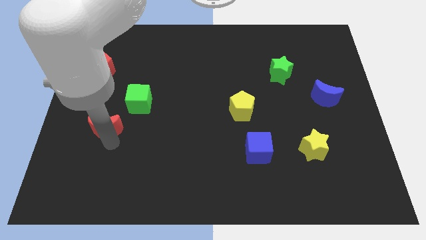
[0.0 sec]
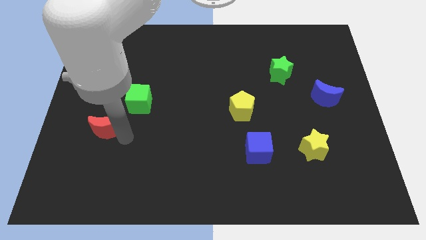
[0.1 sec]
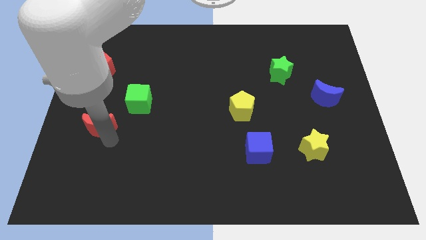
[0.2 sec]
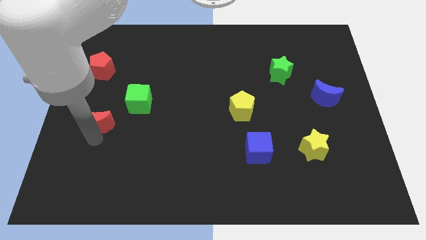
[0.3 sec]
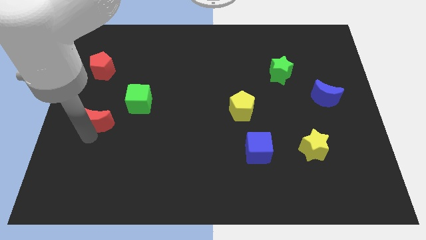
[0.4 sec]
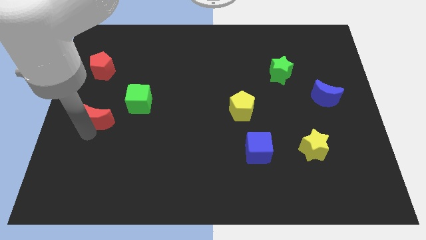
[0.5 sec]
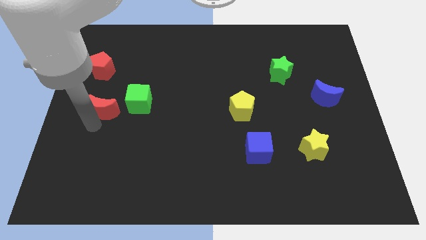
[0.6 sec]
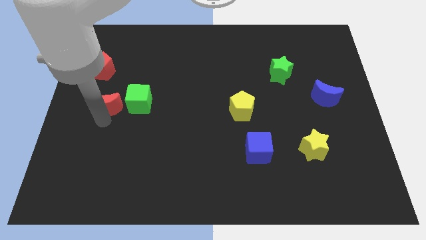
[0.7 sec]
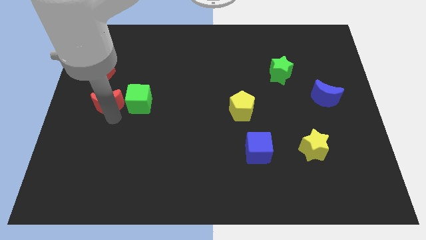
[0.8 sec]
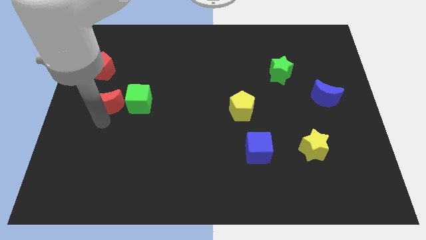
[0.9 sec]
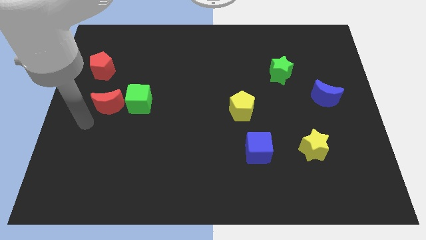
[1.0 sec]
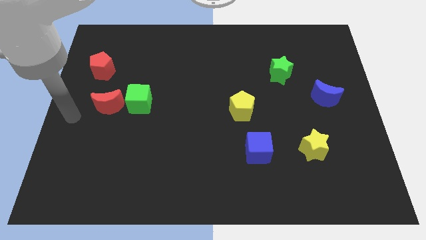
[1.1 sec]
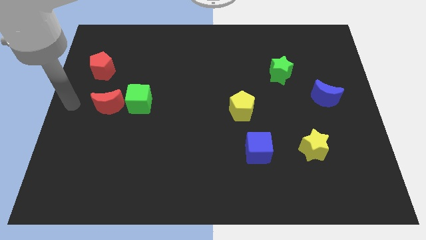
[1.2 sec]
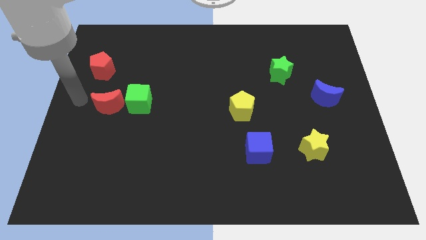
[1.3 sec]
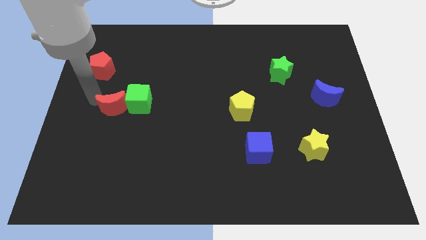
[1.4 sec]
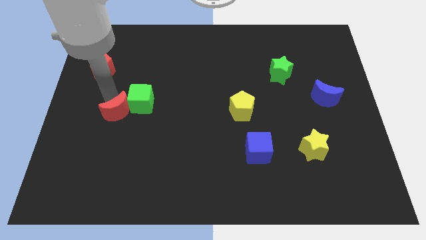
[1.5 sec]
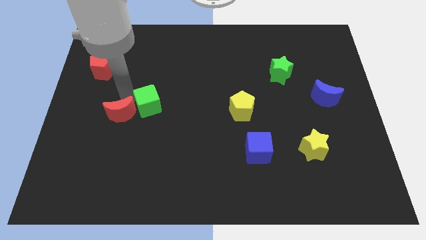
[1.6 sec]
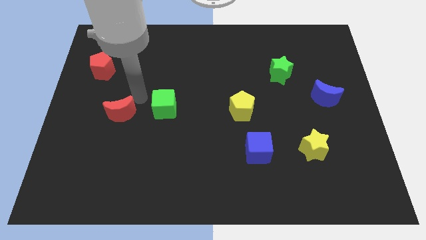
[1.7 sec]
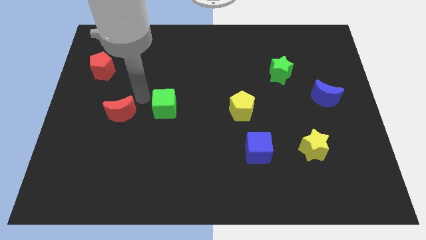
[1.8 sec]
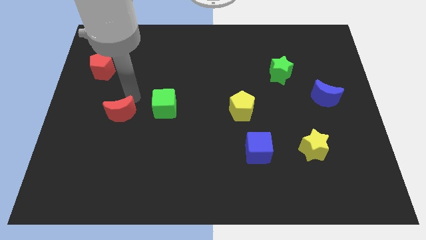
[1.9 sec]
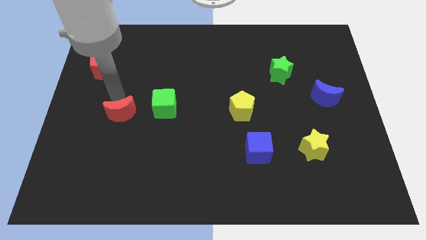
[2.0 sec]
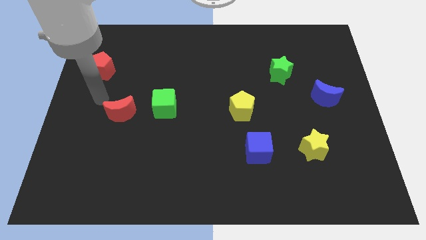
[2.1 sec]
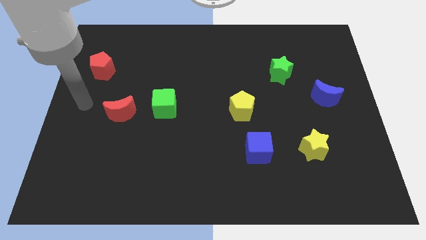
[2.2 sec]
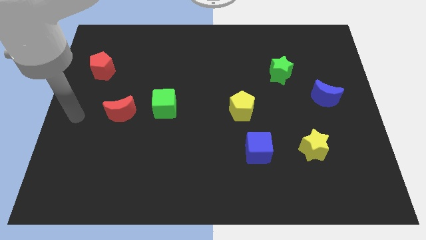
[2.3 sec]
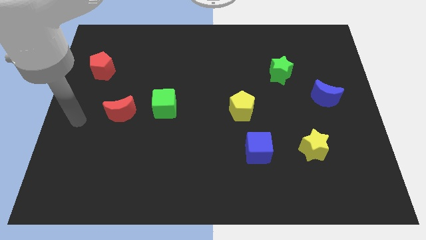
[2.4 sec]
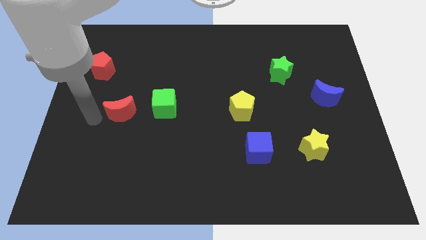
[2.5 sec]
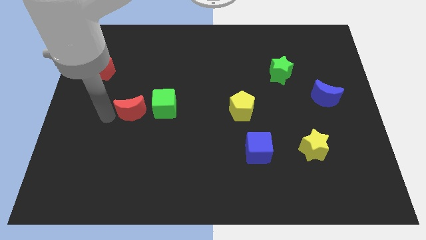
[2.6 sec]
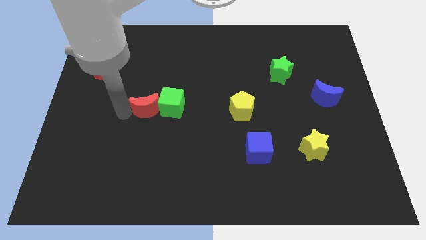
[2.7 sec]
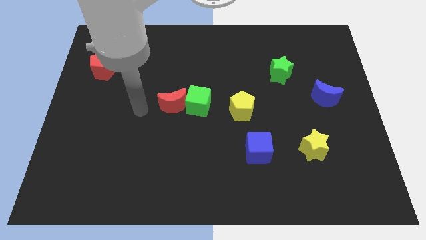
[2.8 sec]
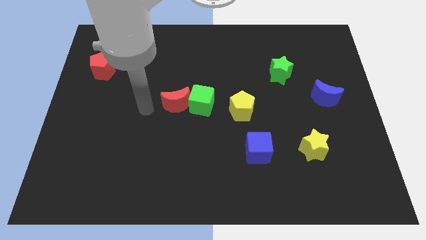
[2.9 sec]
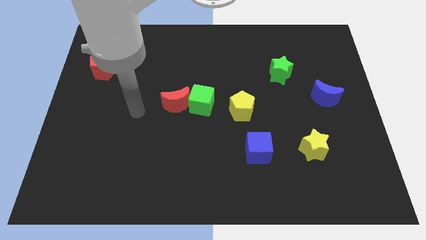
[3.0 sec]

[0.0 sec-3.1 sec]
bring the green cube and red moon at the left side of the yellow pentagon

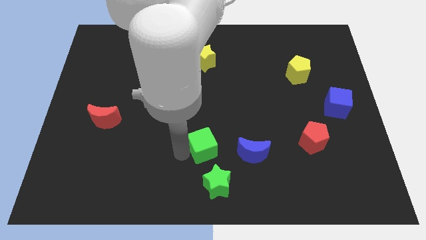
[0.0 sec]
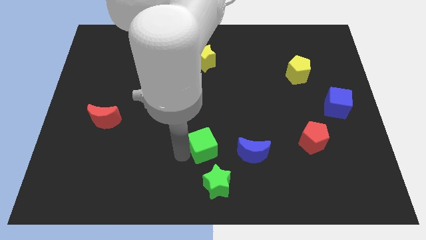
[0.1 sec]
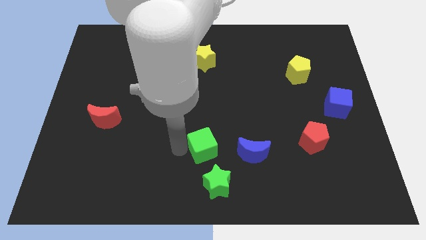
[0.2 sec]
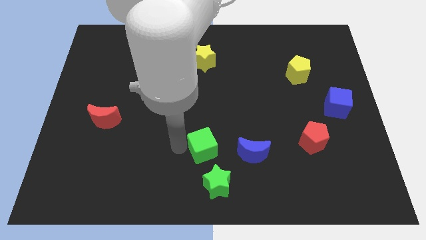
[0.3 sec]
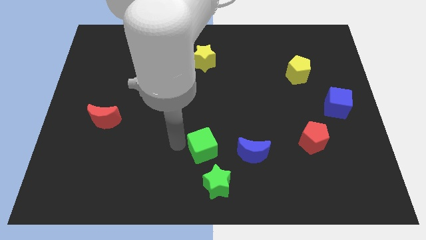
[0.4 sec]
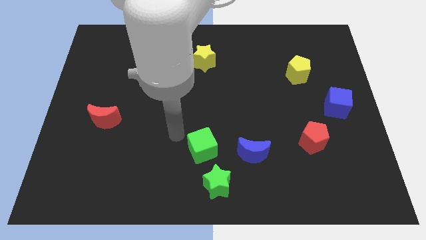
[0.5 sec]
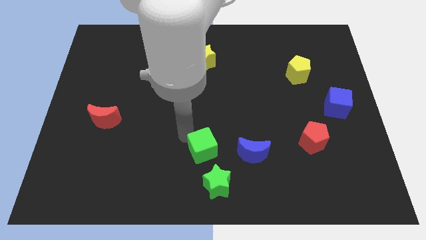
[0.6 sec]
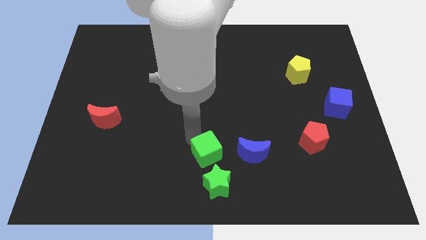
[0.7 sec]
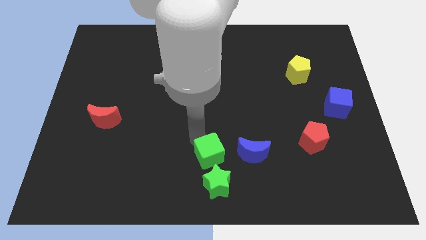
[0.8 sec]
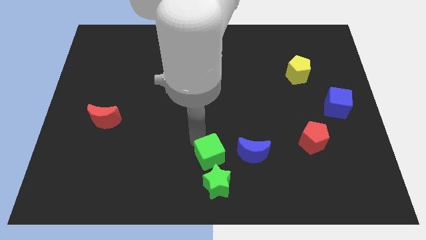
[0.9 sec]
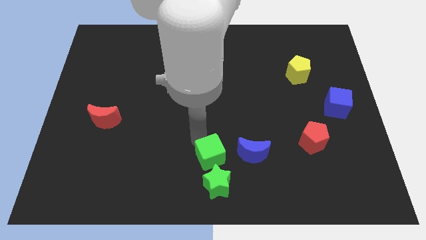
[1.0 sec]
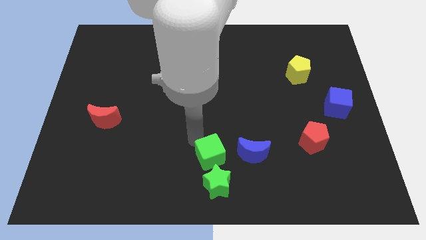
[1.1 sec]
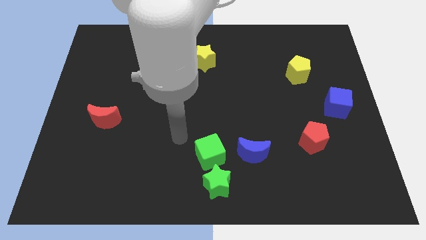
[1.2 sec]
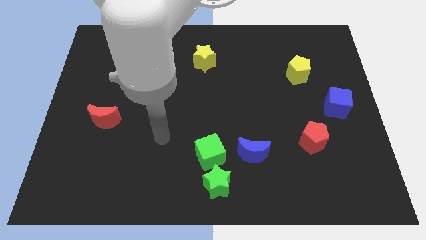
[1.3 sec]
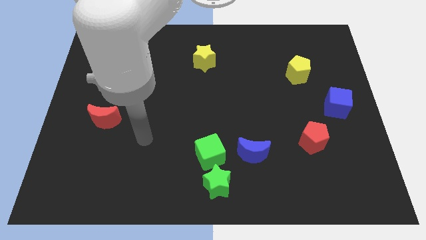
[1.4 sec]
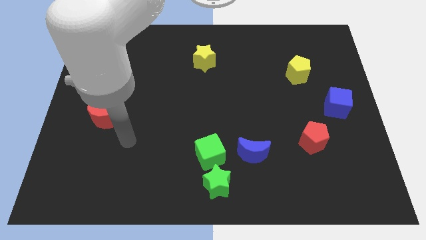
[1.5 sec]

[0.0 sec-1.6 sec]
push the green cube close to the green star and move away from it

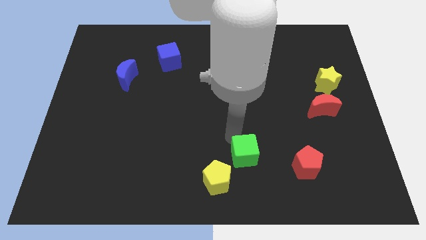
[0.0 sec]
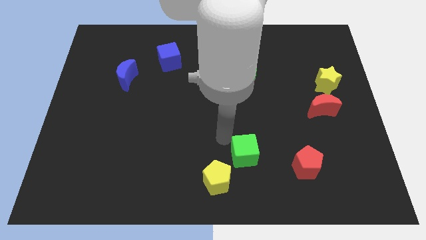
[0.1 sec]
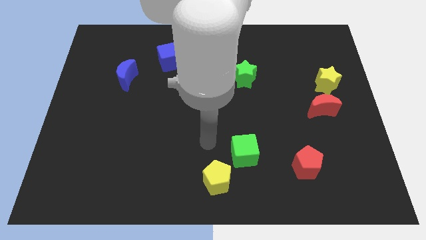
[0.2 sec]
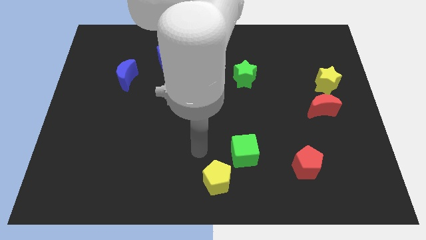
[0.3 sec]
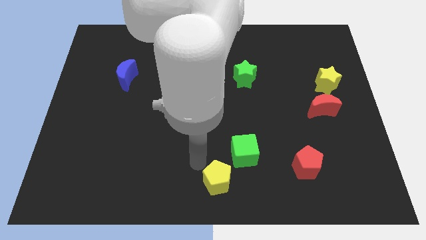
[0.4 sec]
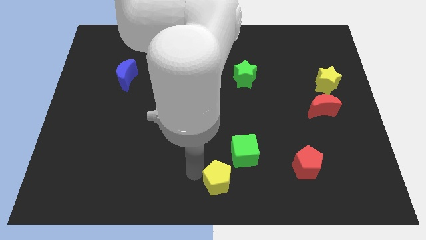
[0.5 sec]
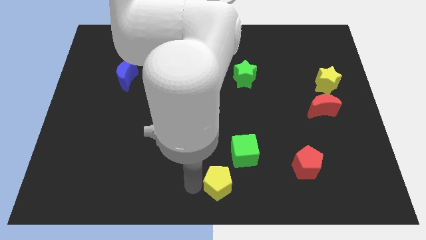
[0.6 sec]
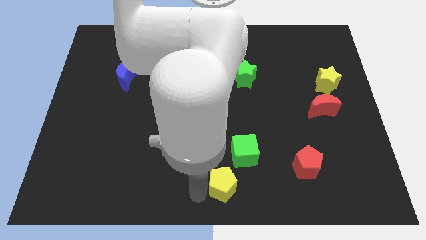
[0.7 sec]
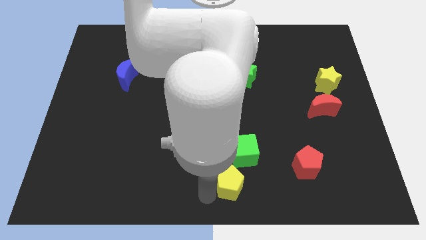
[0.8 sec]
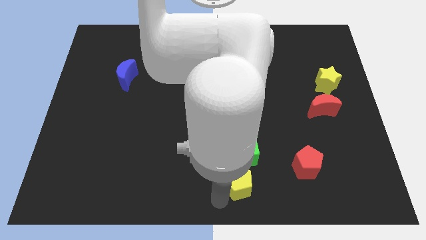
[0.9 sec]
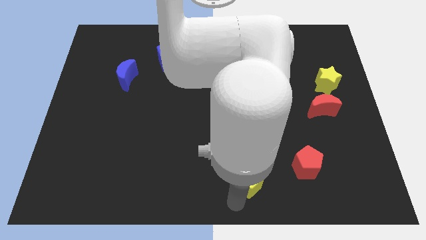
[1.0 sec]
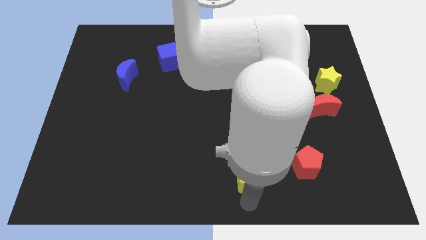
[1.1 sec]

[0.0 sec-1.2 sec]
place yellow pentagon to the bottom of green cube

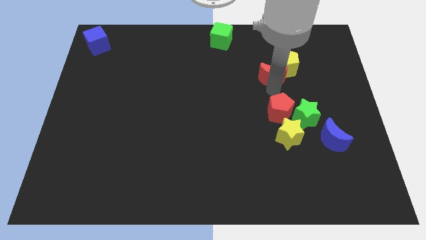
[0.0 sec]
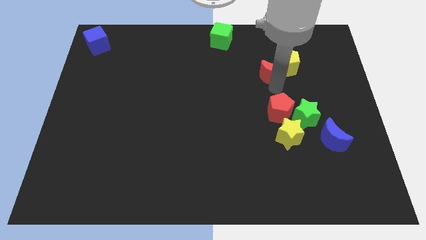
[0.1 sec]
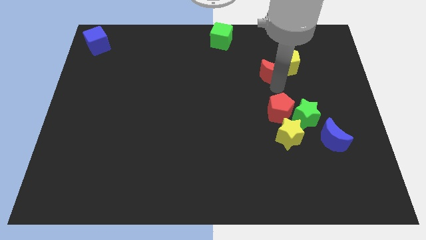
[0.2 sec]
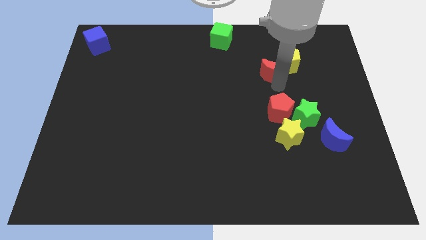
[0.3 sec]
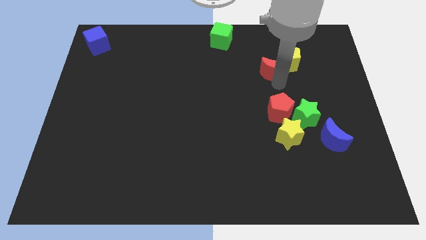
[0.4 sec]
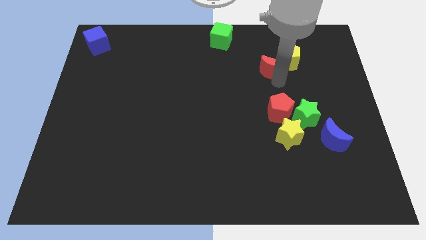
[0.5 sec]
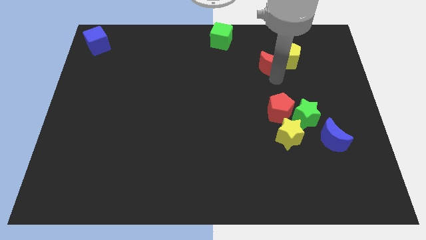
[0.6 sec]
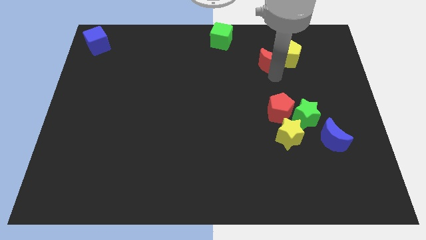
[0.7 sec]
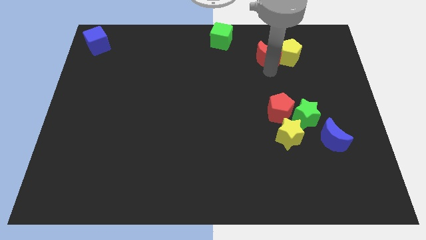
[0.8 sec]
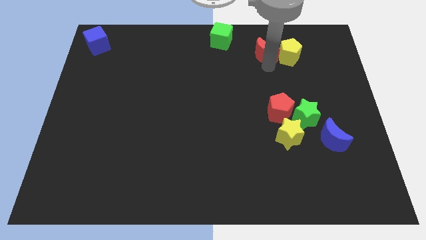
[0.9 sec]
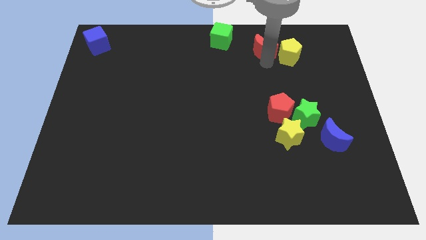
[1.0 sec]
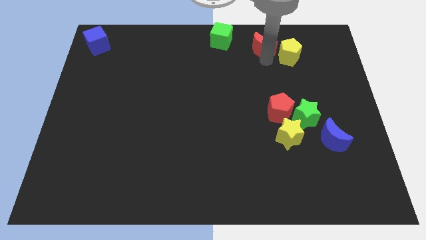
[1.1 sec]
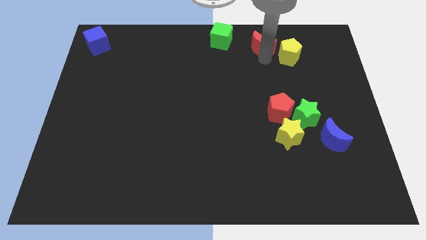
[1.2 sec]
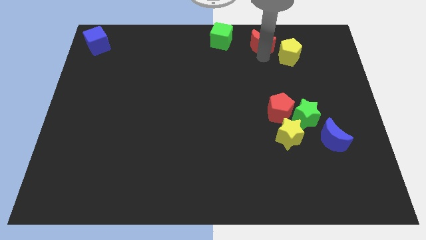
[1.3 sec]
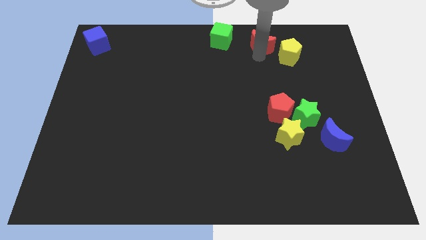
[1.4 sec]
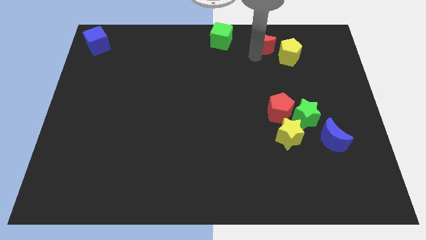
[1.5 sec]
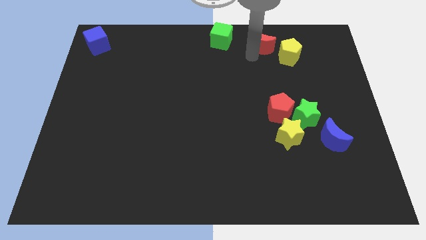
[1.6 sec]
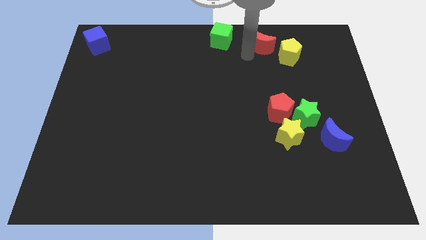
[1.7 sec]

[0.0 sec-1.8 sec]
push yellow pentagon with the red moon

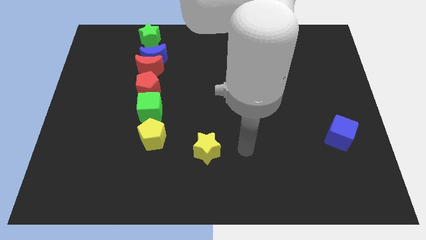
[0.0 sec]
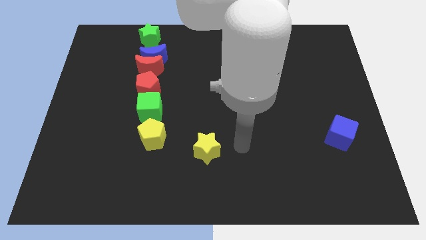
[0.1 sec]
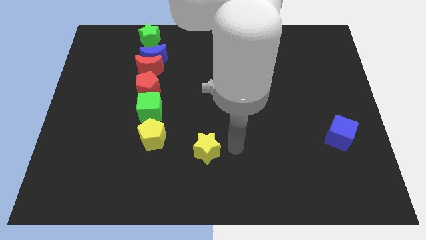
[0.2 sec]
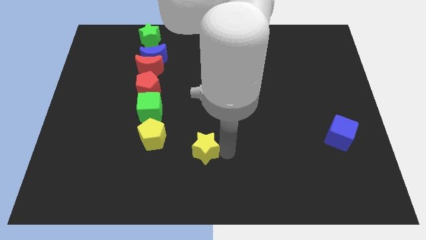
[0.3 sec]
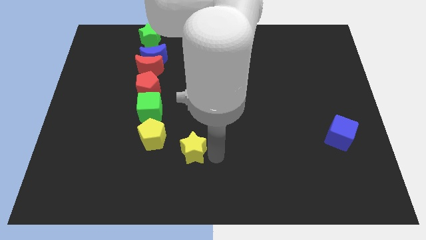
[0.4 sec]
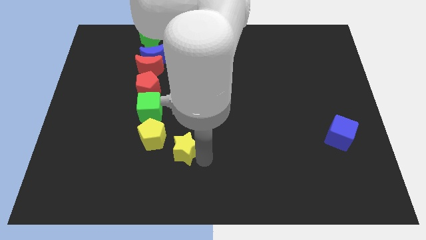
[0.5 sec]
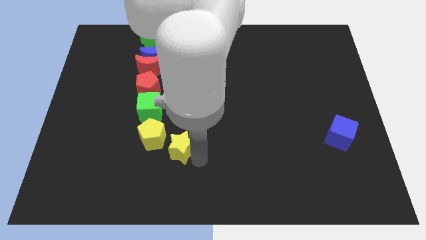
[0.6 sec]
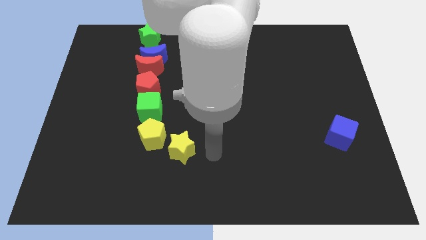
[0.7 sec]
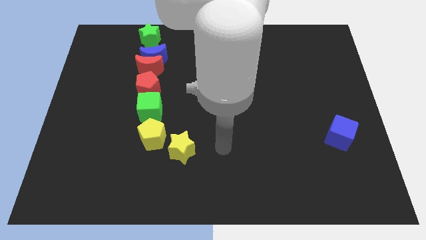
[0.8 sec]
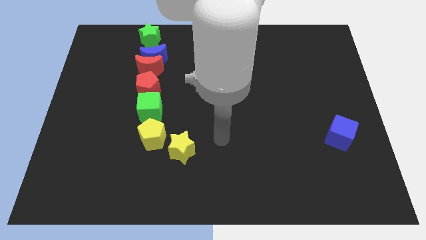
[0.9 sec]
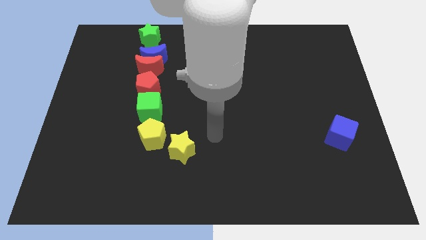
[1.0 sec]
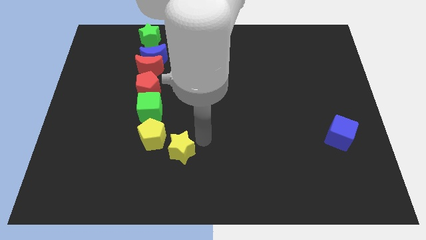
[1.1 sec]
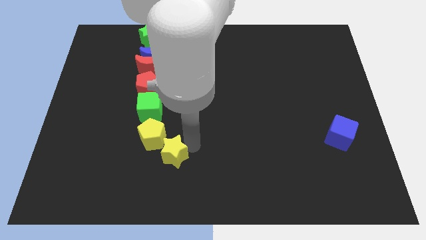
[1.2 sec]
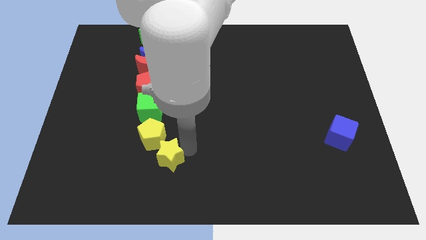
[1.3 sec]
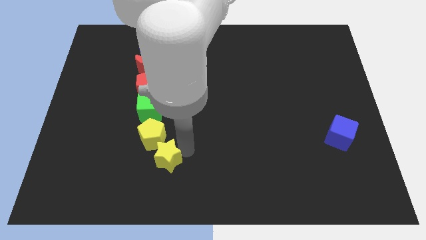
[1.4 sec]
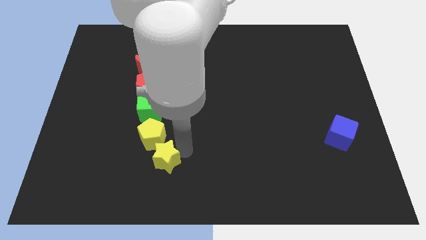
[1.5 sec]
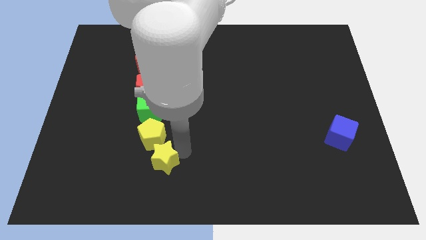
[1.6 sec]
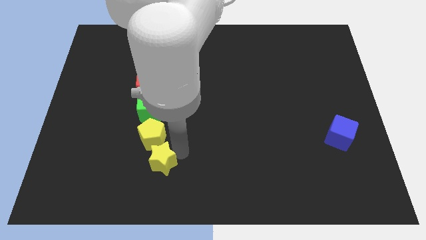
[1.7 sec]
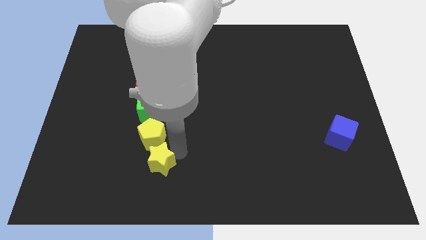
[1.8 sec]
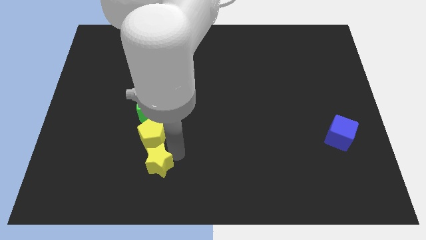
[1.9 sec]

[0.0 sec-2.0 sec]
place the yellow star below the yellow pentagon
